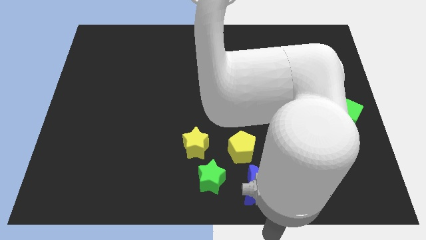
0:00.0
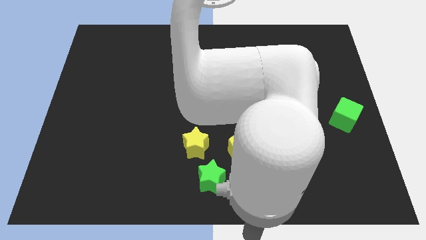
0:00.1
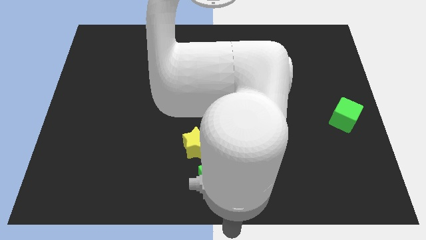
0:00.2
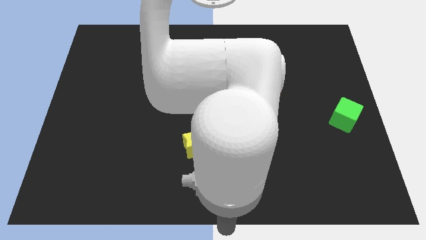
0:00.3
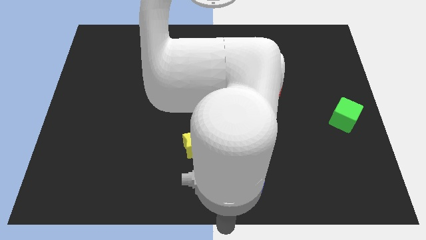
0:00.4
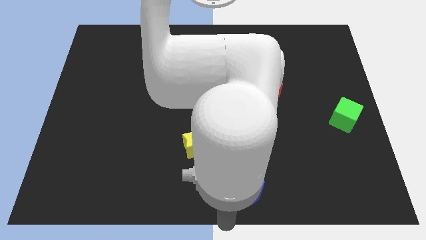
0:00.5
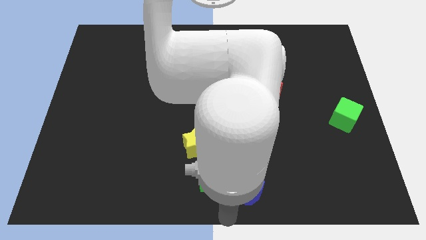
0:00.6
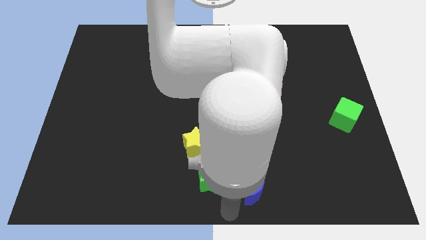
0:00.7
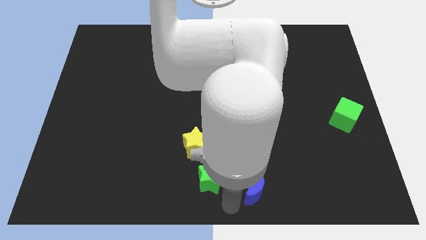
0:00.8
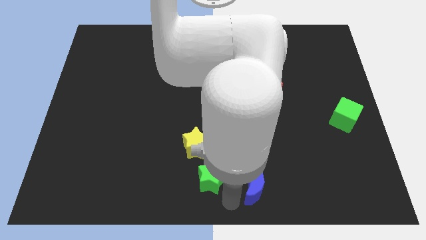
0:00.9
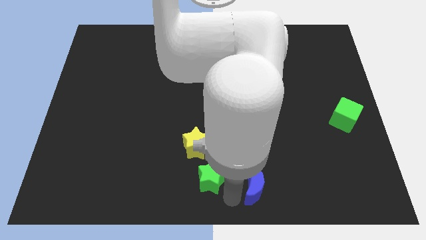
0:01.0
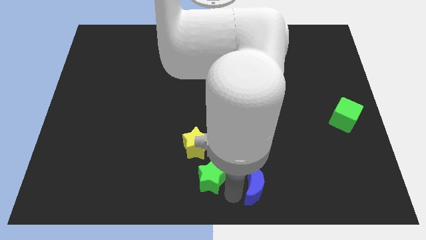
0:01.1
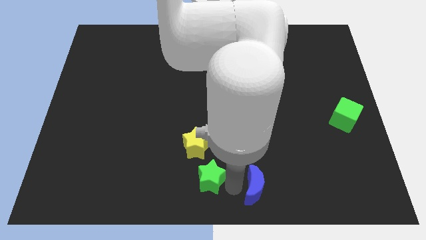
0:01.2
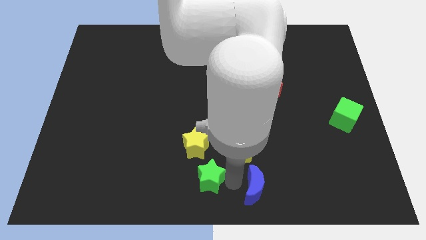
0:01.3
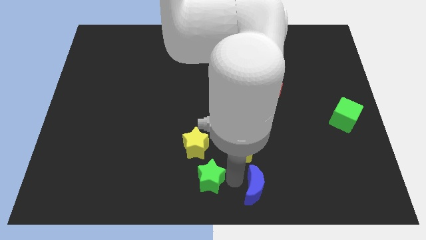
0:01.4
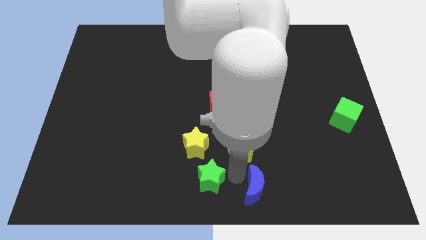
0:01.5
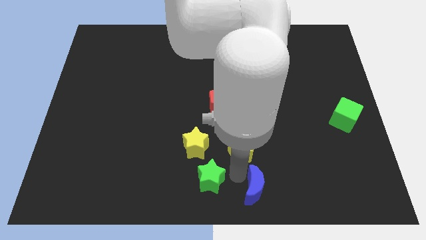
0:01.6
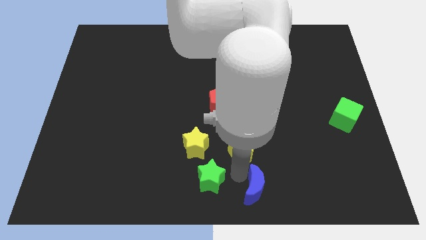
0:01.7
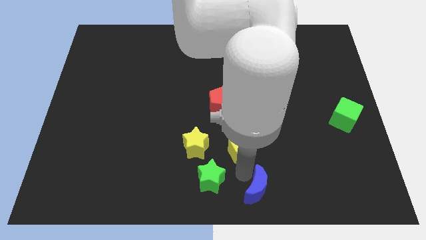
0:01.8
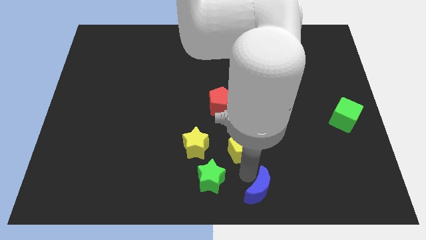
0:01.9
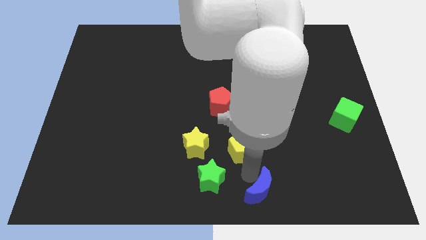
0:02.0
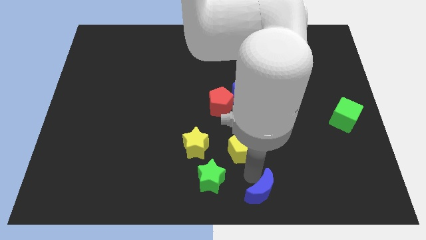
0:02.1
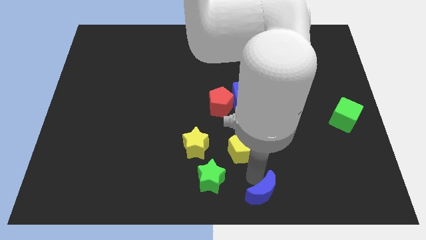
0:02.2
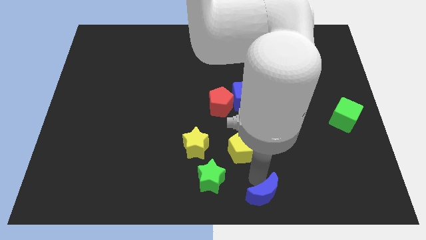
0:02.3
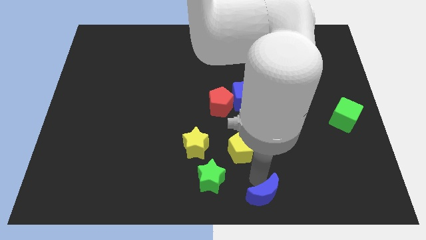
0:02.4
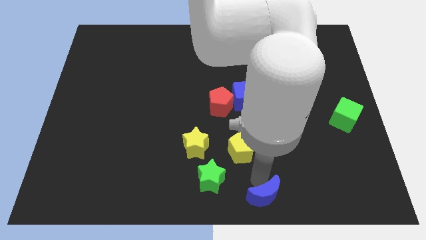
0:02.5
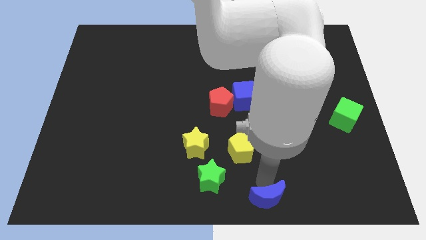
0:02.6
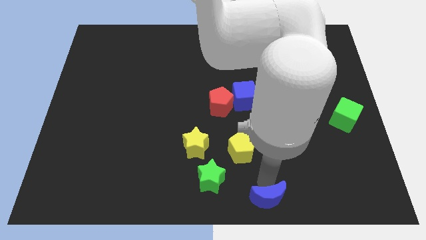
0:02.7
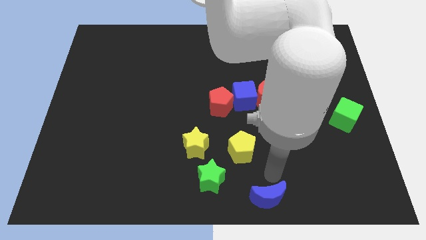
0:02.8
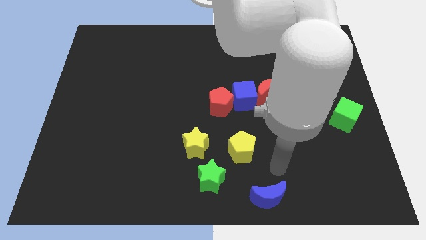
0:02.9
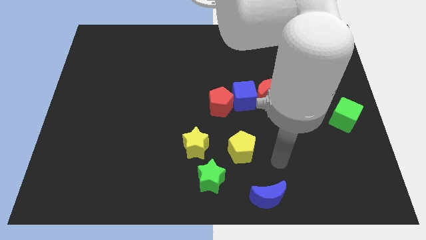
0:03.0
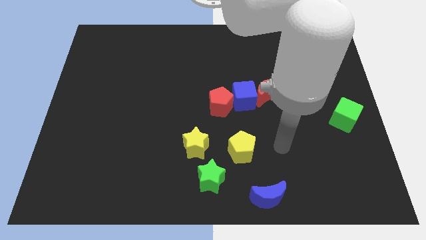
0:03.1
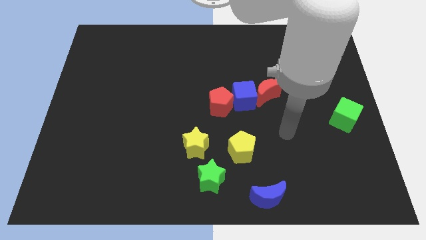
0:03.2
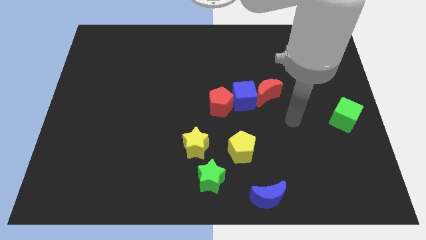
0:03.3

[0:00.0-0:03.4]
push the blue moon to the bottom middle of the board

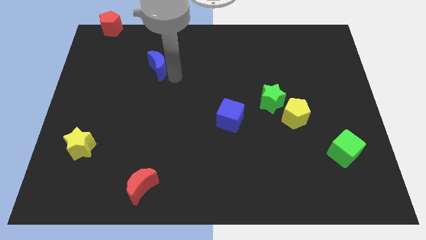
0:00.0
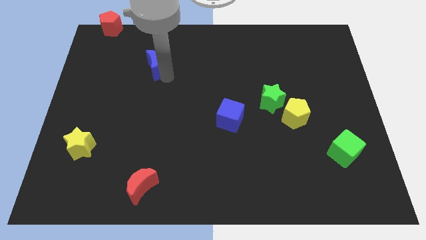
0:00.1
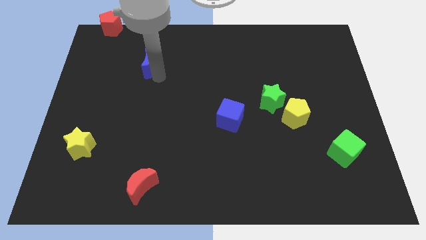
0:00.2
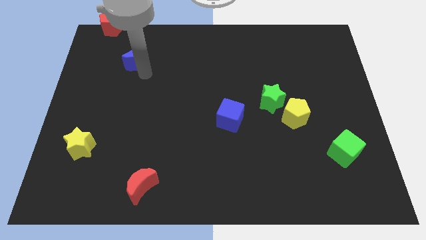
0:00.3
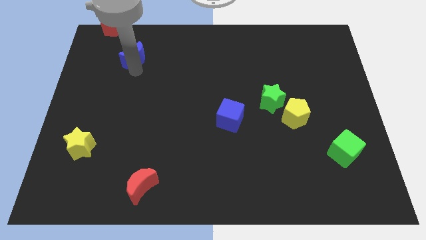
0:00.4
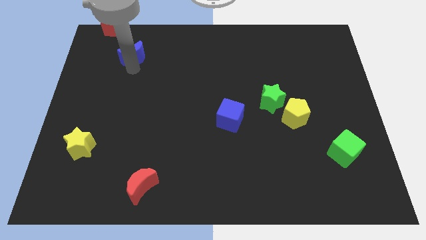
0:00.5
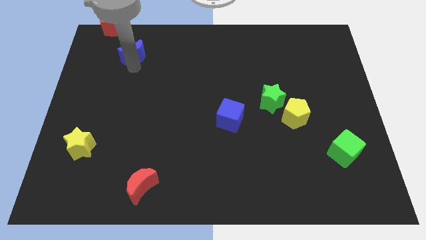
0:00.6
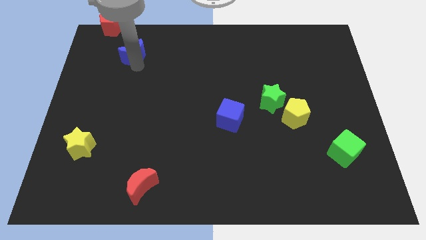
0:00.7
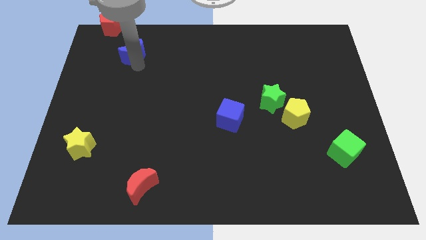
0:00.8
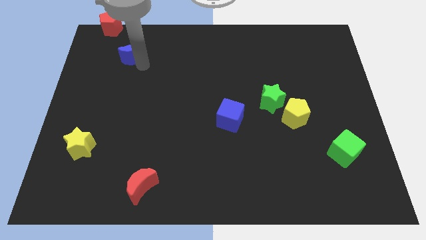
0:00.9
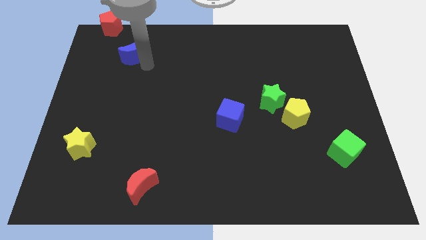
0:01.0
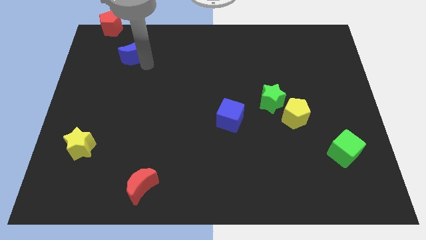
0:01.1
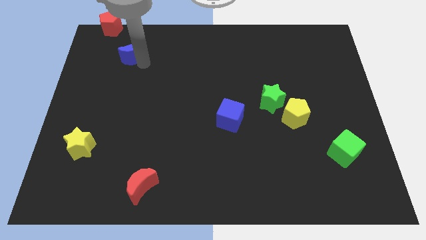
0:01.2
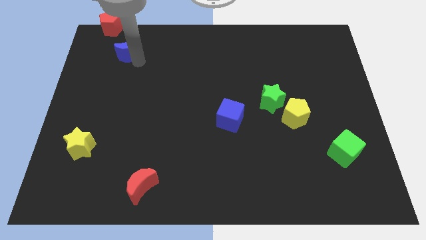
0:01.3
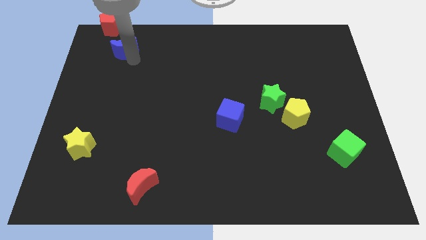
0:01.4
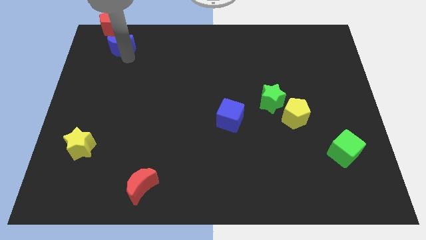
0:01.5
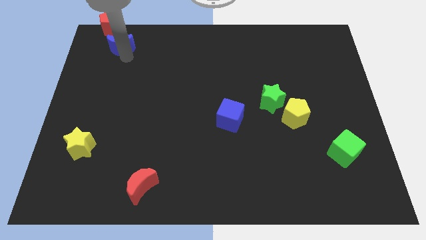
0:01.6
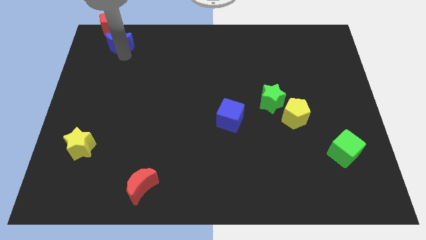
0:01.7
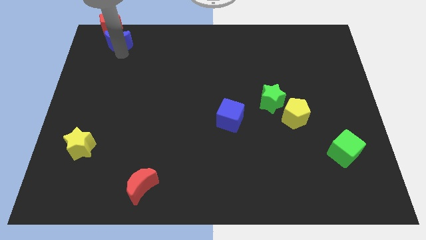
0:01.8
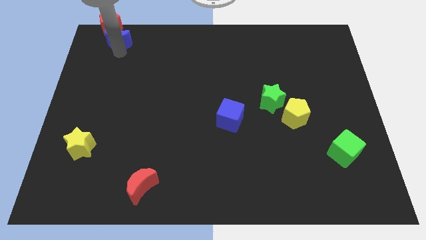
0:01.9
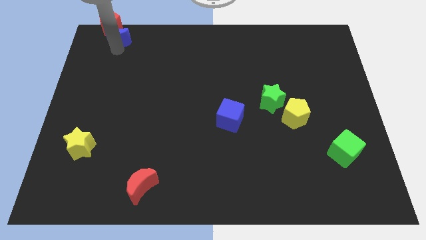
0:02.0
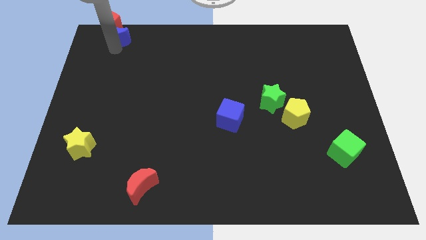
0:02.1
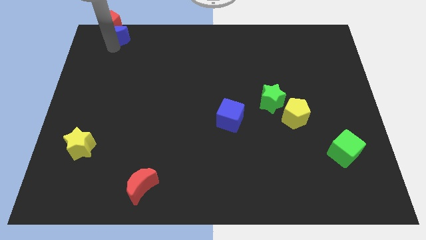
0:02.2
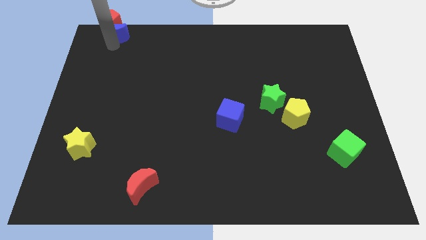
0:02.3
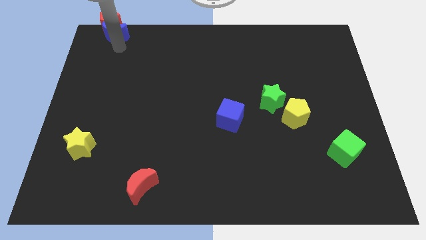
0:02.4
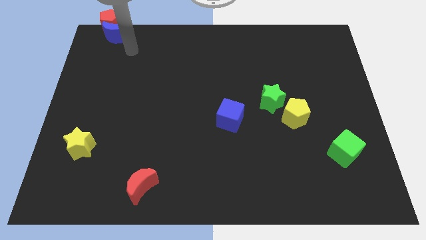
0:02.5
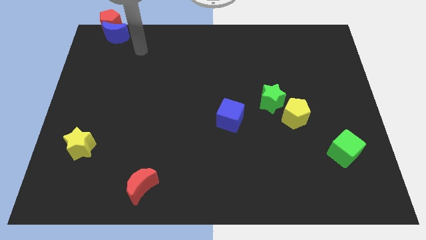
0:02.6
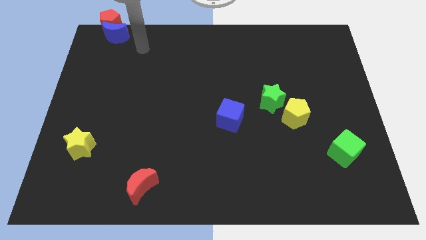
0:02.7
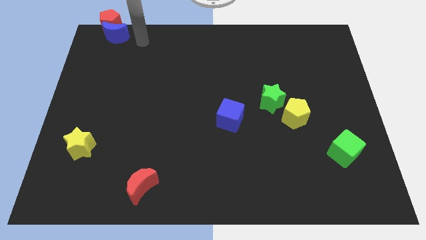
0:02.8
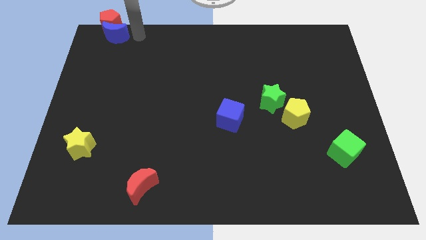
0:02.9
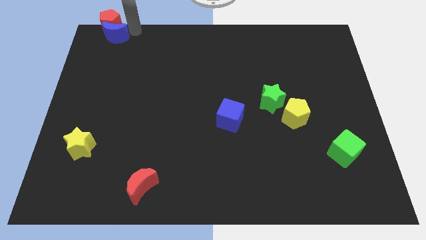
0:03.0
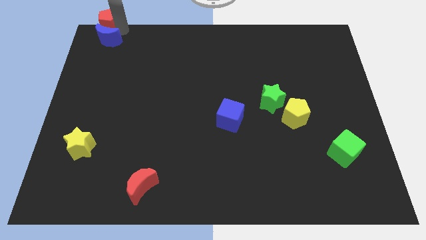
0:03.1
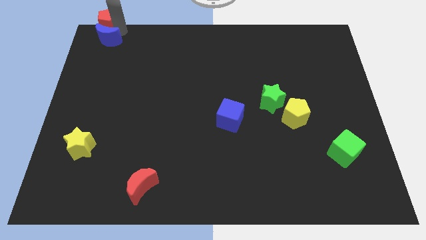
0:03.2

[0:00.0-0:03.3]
place the blue crescent to the bottom of red pentagon

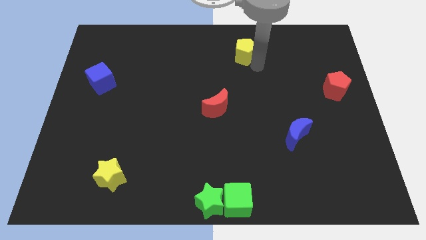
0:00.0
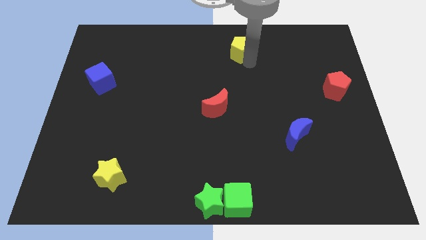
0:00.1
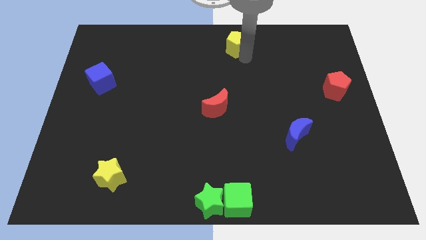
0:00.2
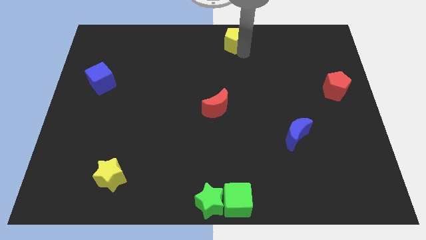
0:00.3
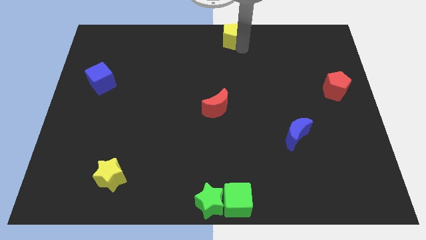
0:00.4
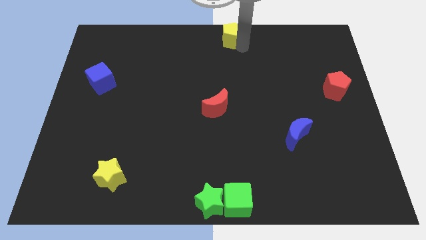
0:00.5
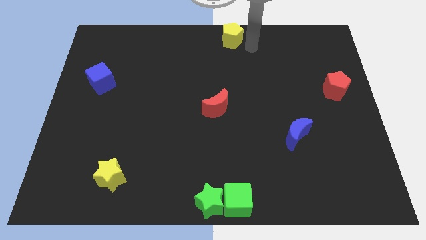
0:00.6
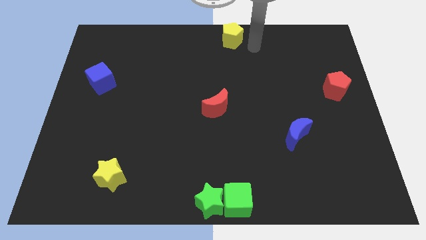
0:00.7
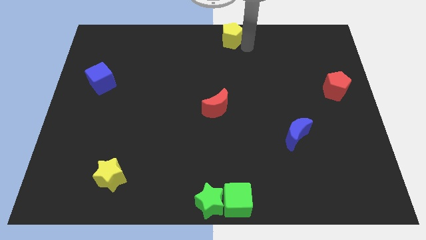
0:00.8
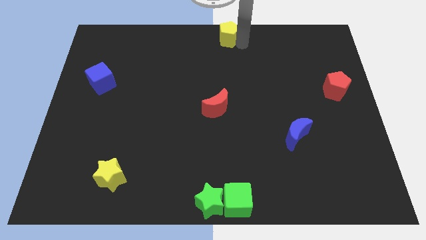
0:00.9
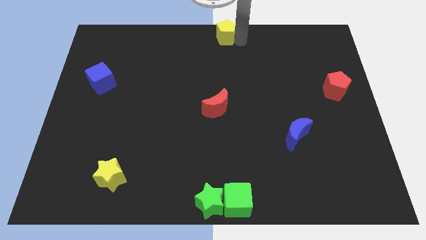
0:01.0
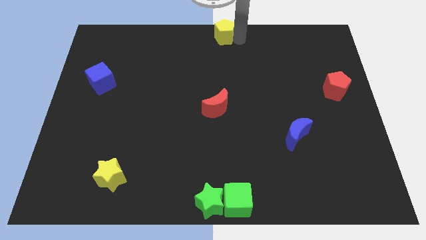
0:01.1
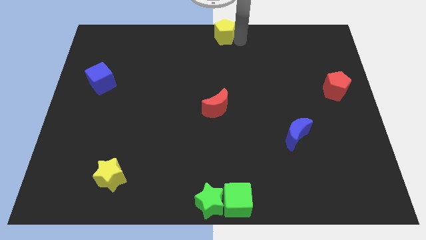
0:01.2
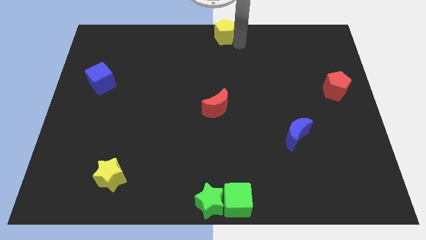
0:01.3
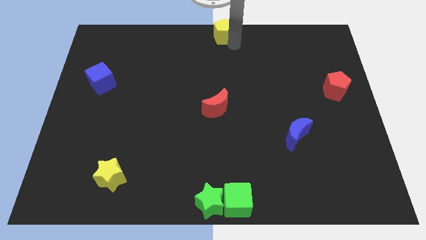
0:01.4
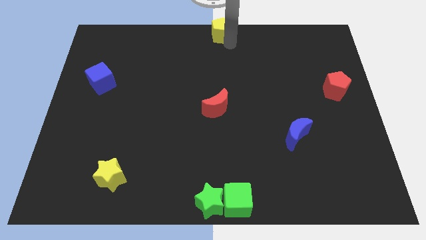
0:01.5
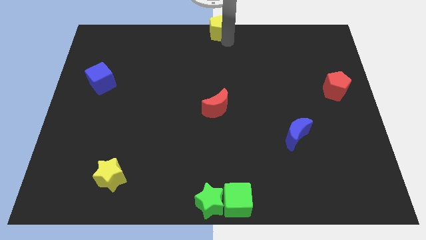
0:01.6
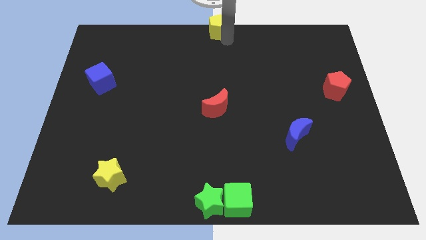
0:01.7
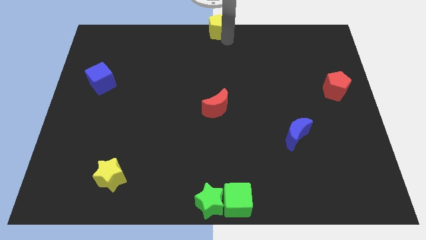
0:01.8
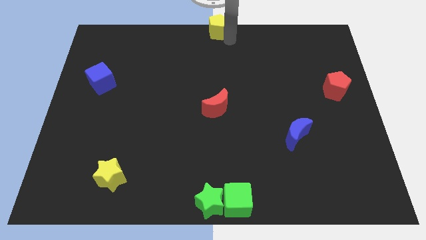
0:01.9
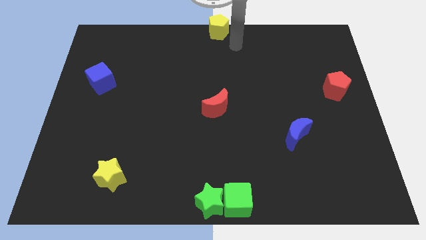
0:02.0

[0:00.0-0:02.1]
place the yellow pentagon at the top center of the board

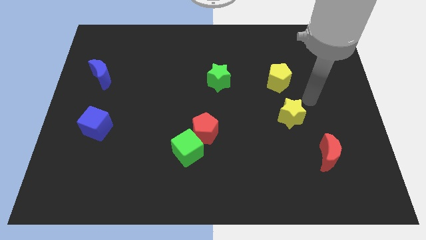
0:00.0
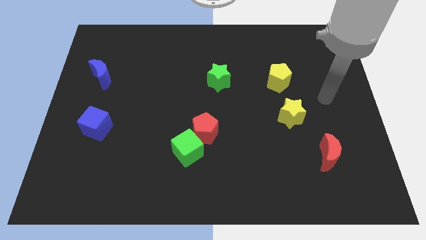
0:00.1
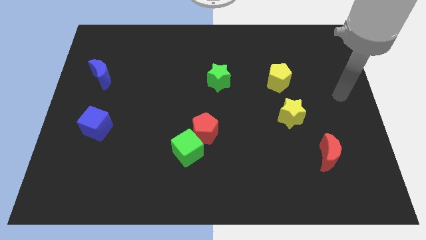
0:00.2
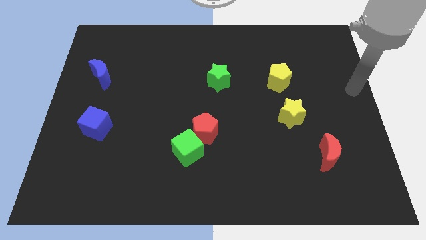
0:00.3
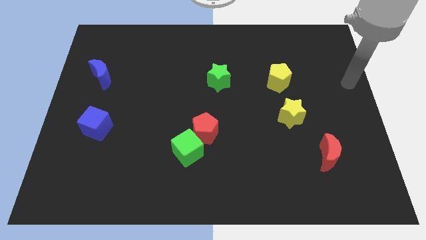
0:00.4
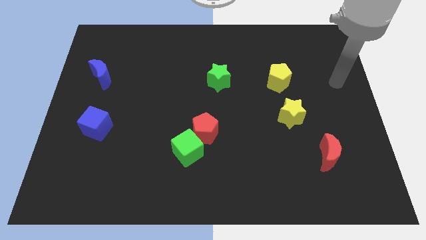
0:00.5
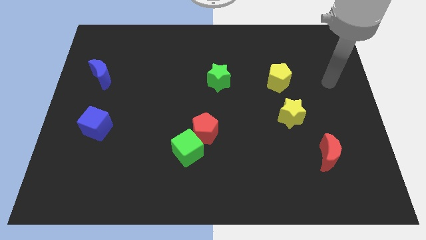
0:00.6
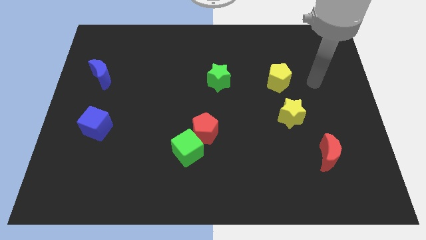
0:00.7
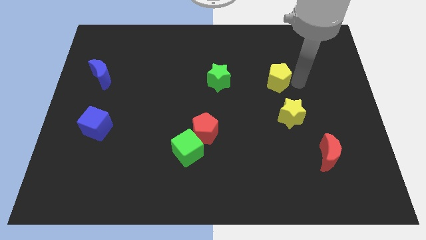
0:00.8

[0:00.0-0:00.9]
point your arm to the right side of yellow pentagon
